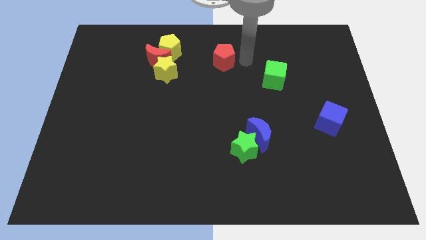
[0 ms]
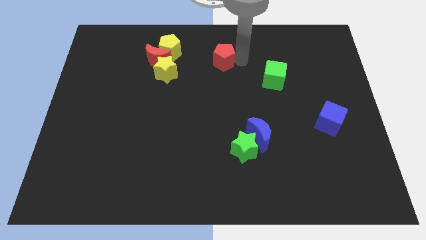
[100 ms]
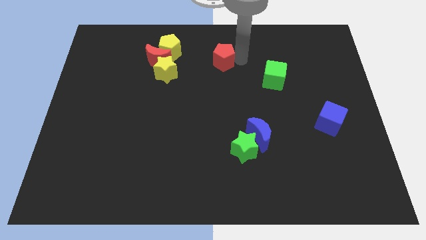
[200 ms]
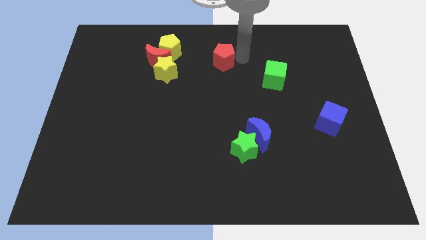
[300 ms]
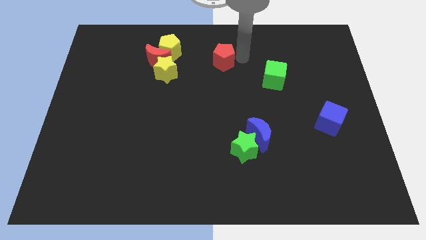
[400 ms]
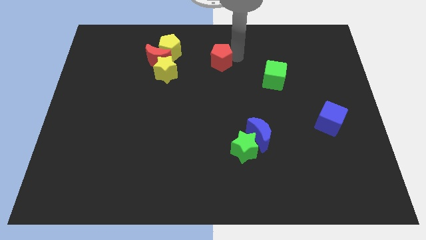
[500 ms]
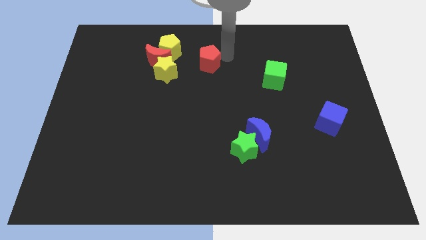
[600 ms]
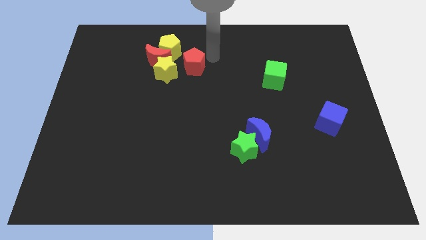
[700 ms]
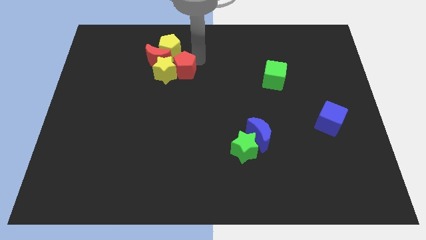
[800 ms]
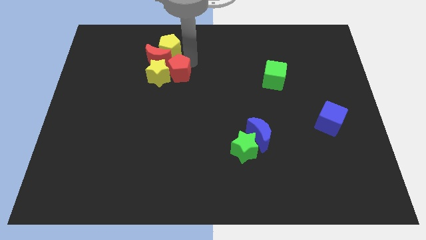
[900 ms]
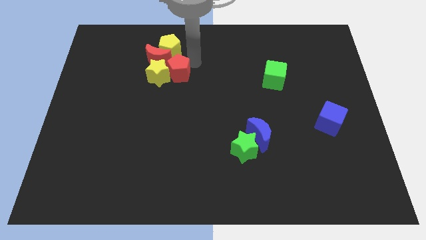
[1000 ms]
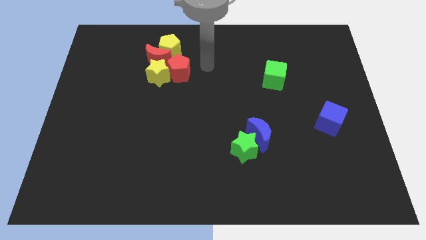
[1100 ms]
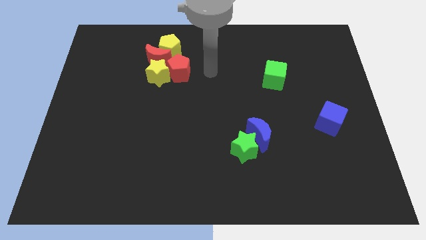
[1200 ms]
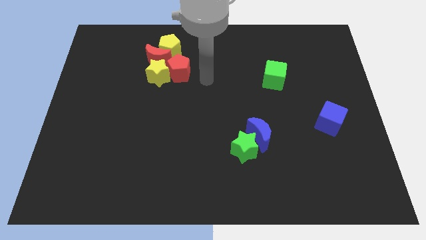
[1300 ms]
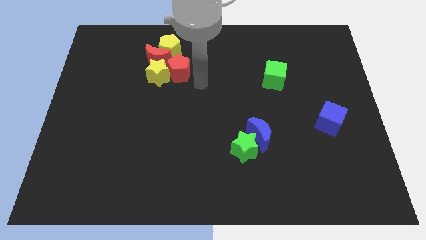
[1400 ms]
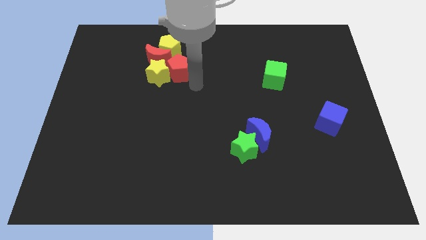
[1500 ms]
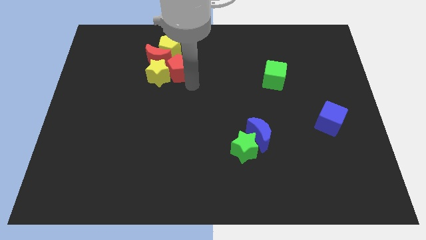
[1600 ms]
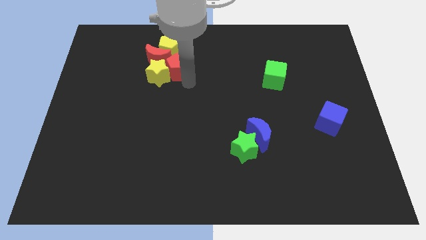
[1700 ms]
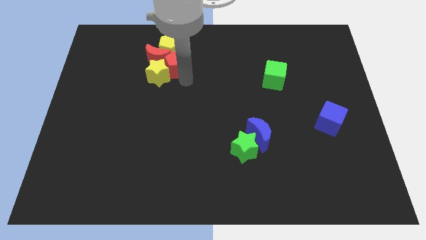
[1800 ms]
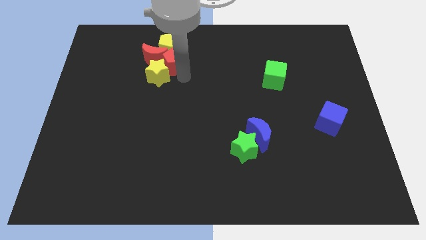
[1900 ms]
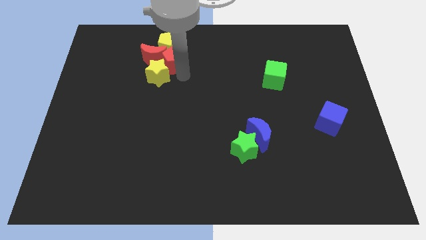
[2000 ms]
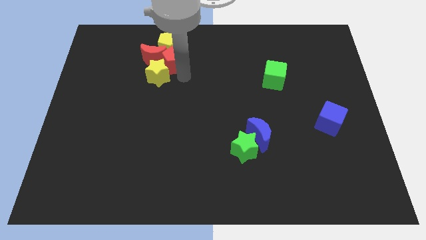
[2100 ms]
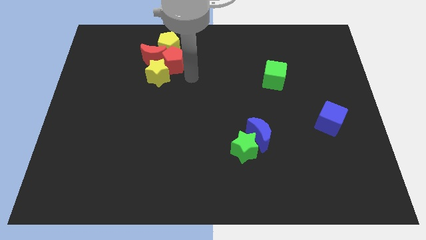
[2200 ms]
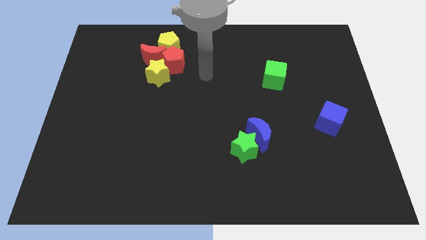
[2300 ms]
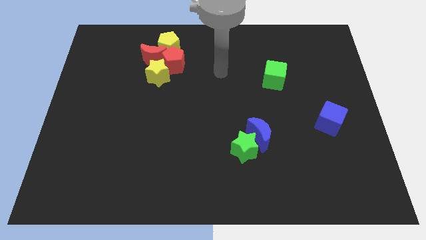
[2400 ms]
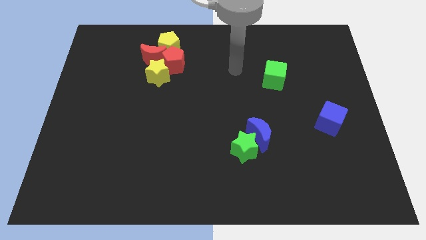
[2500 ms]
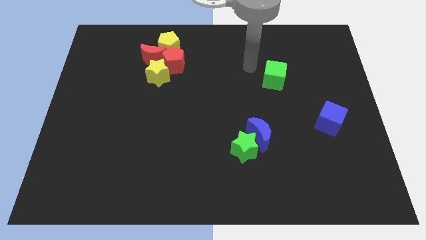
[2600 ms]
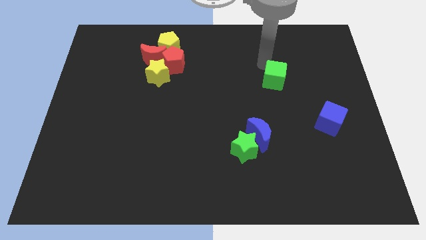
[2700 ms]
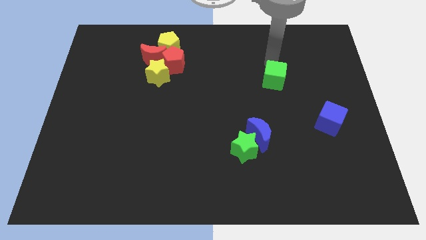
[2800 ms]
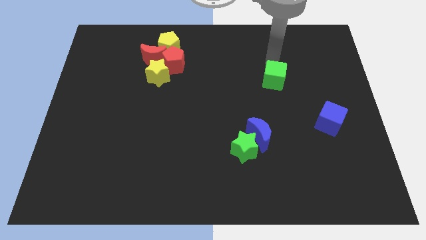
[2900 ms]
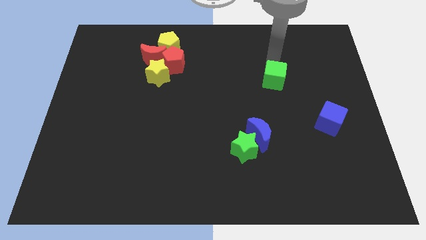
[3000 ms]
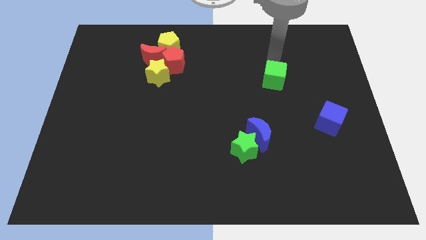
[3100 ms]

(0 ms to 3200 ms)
add the red pentagon to the group of both yellow blocks and red crescent

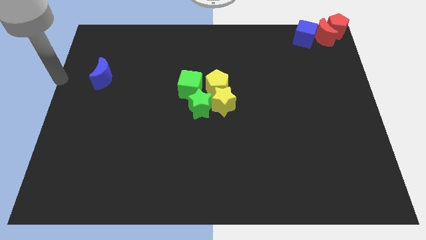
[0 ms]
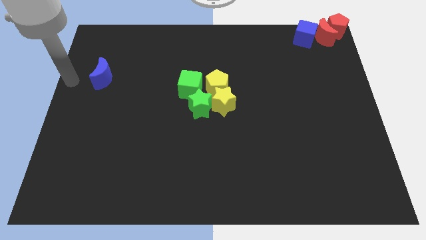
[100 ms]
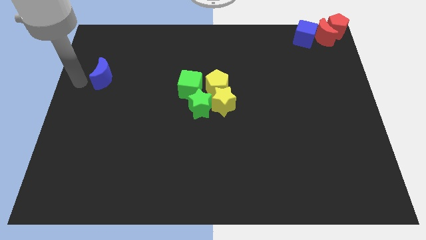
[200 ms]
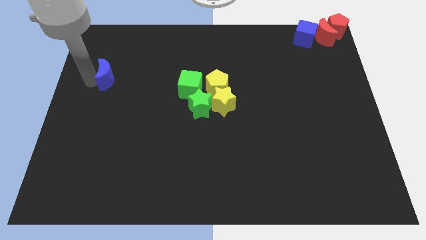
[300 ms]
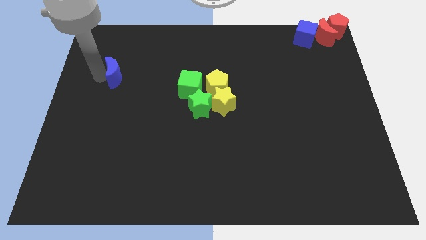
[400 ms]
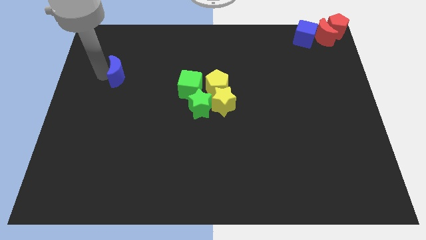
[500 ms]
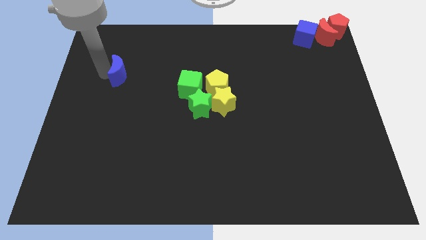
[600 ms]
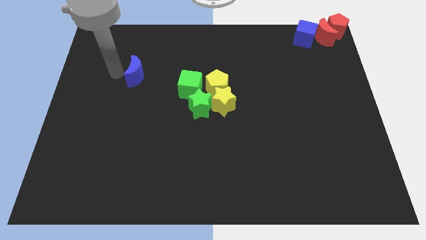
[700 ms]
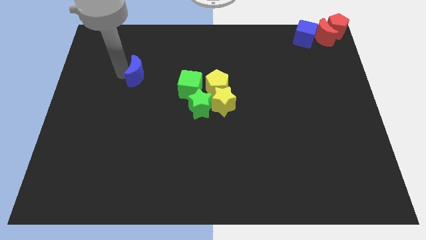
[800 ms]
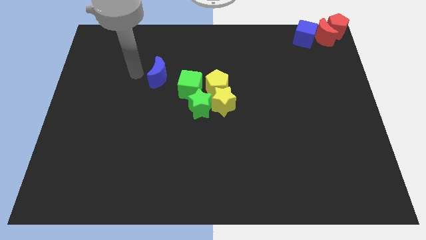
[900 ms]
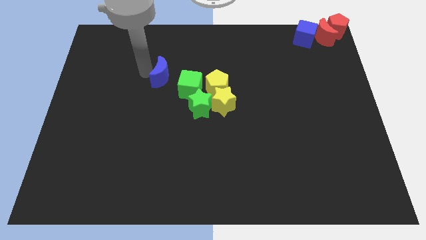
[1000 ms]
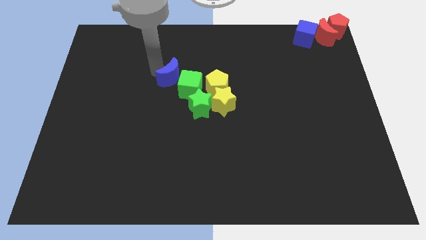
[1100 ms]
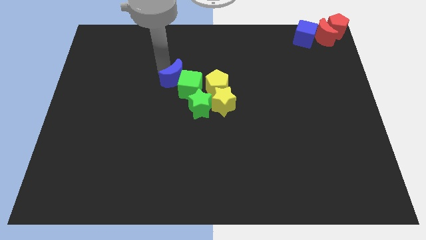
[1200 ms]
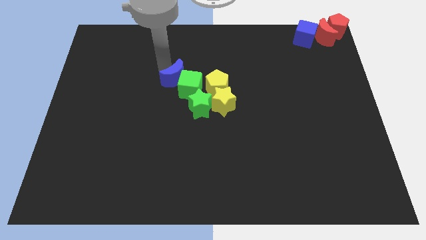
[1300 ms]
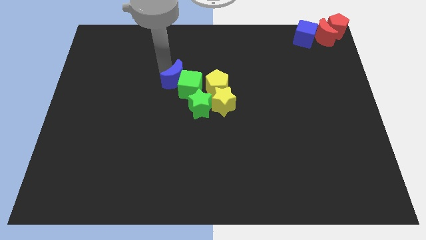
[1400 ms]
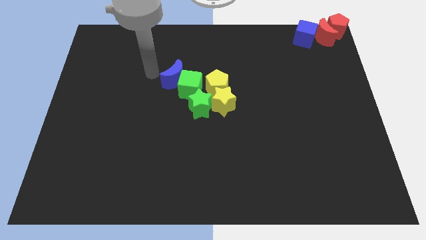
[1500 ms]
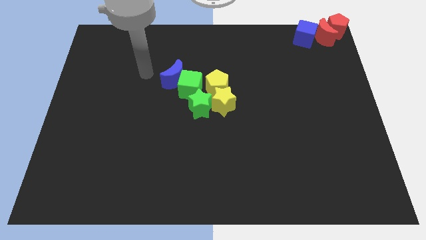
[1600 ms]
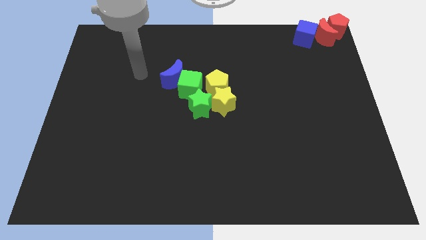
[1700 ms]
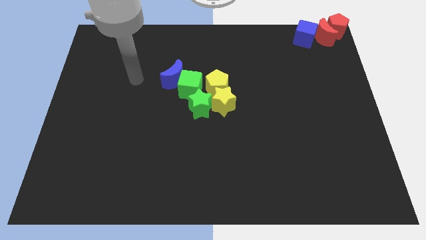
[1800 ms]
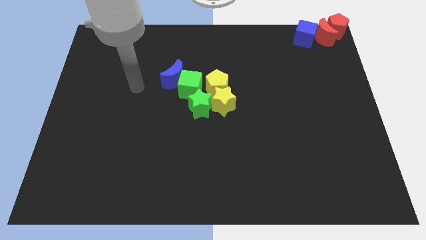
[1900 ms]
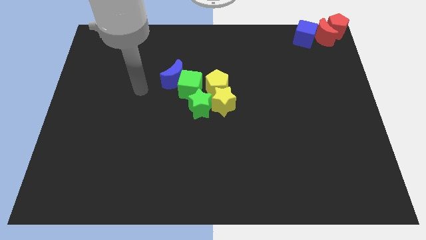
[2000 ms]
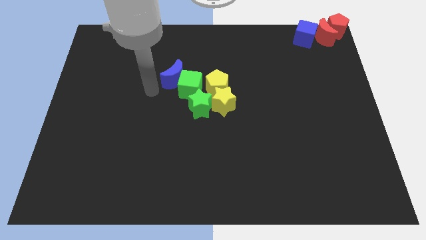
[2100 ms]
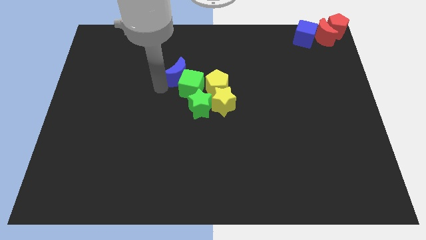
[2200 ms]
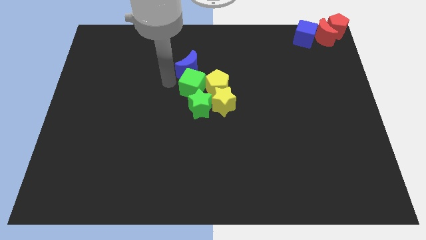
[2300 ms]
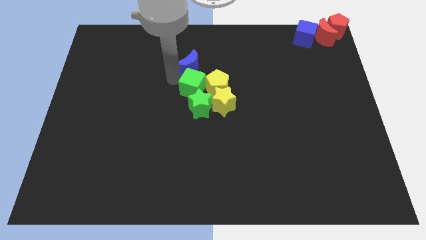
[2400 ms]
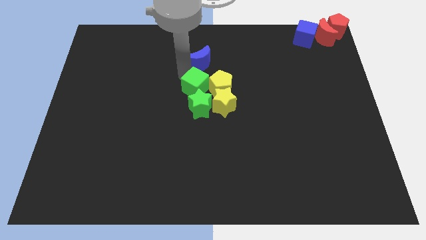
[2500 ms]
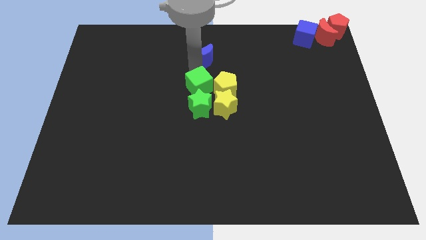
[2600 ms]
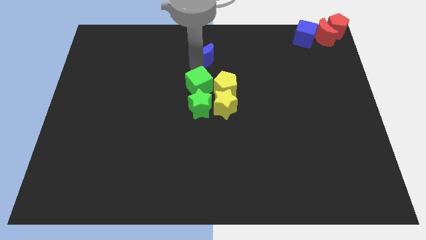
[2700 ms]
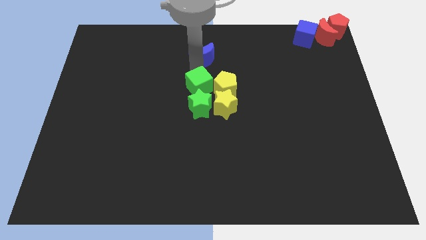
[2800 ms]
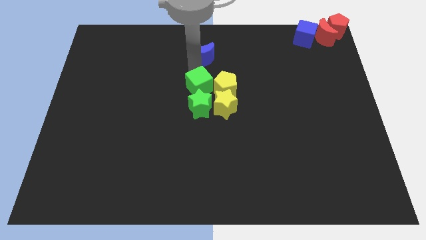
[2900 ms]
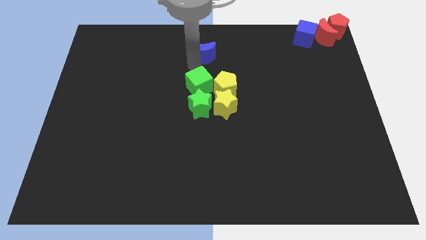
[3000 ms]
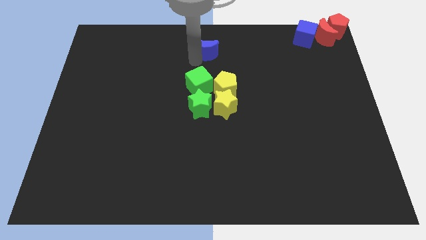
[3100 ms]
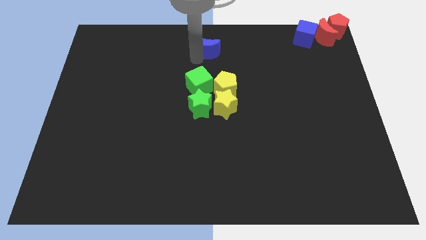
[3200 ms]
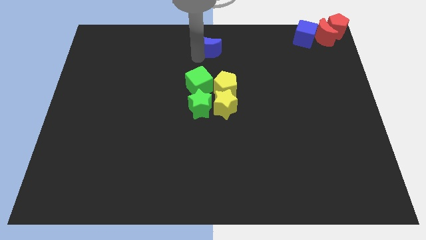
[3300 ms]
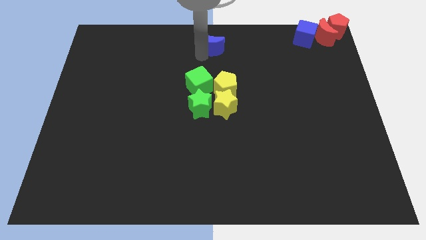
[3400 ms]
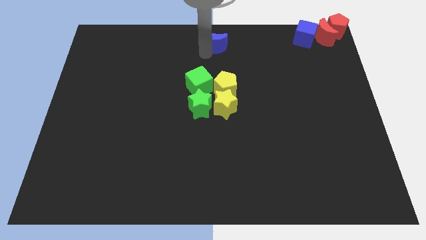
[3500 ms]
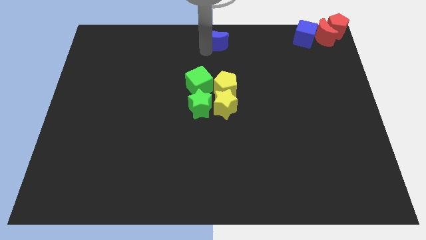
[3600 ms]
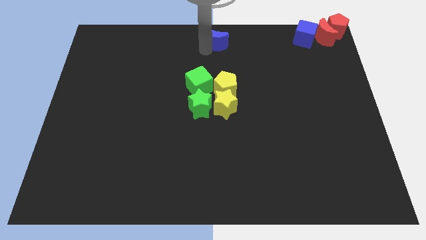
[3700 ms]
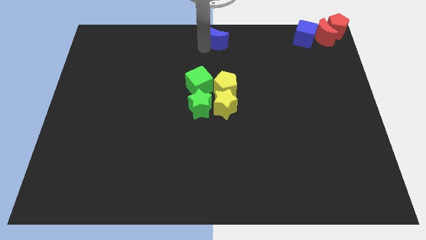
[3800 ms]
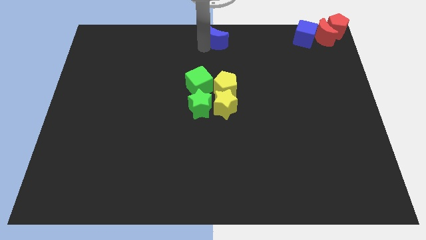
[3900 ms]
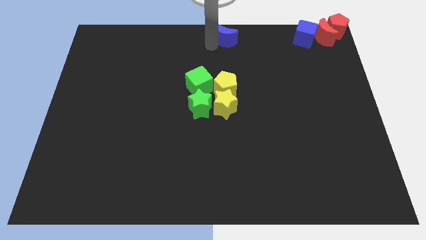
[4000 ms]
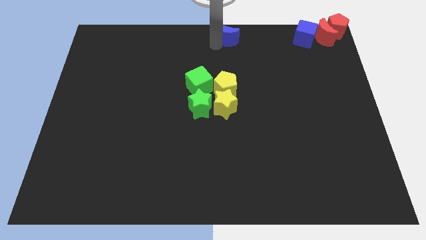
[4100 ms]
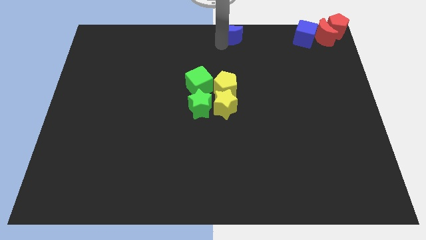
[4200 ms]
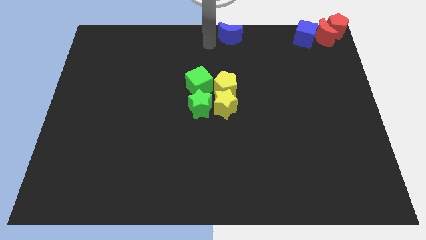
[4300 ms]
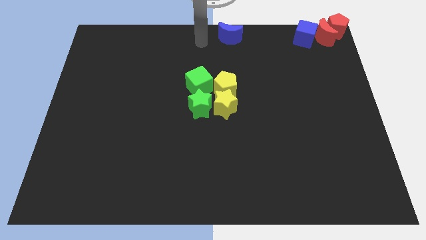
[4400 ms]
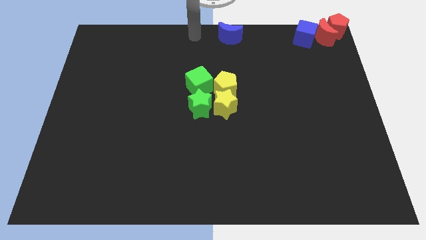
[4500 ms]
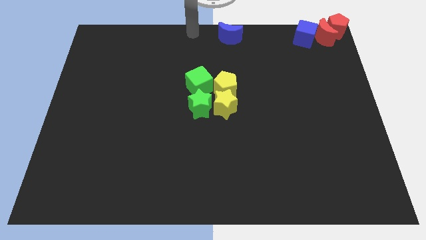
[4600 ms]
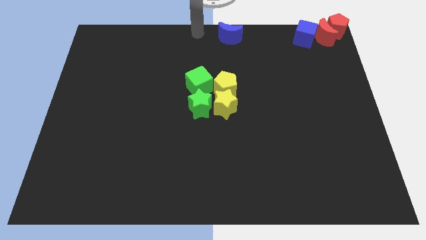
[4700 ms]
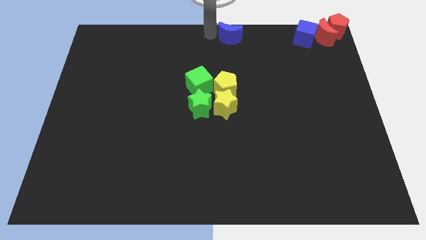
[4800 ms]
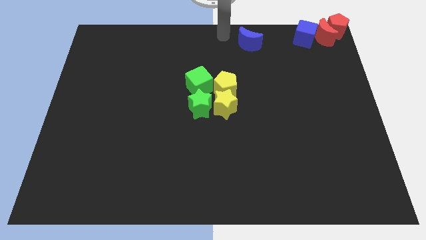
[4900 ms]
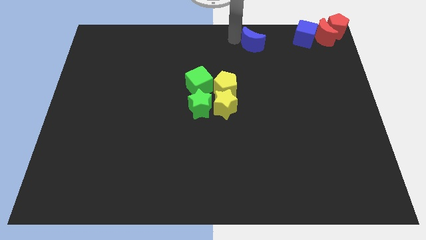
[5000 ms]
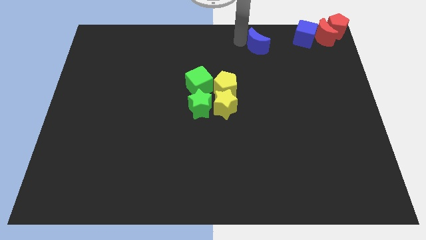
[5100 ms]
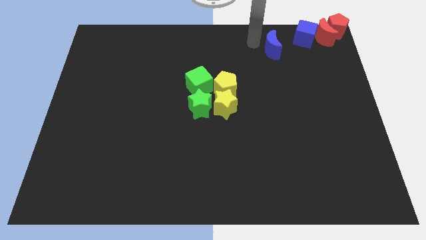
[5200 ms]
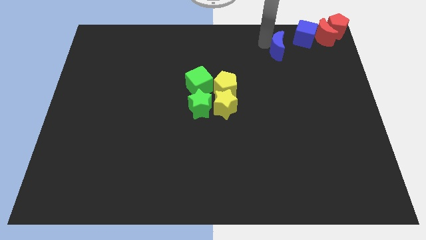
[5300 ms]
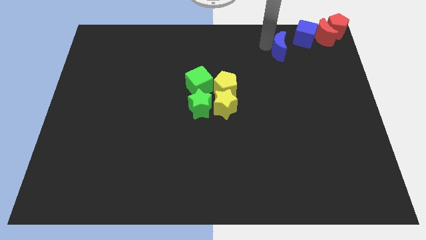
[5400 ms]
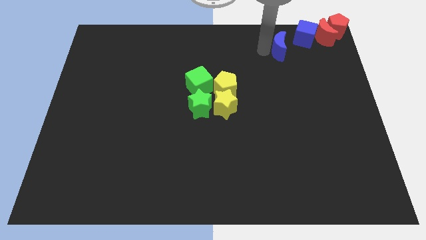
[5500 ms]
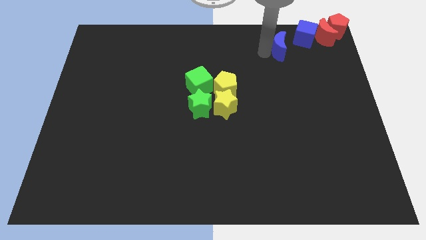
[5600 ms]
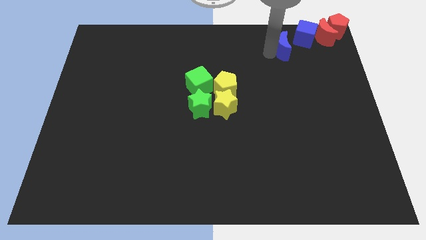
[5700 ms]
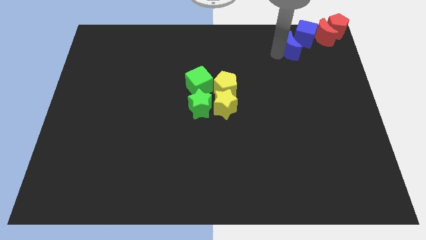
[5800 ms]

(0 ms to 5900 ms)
move the blue crescent towards the blue cube
